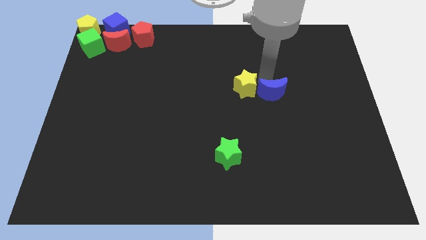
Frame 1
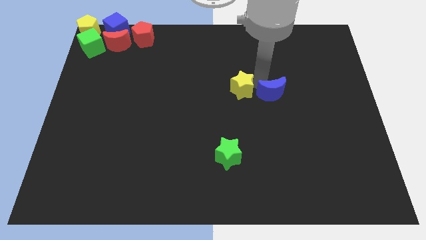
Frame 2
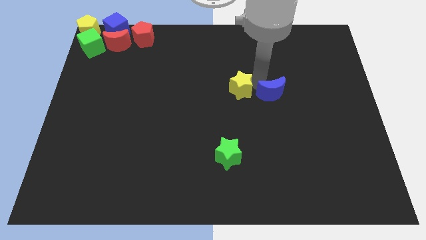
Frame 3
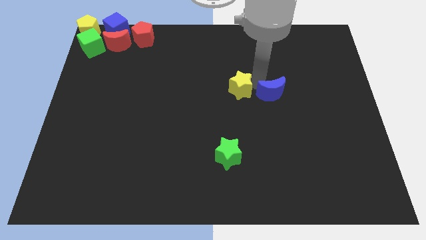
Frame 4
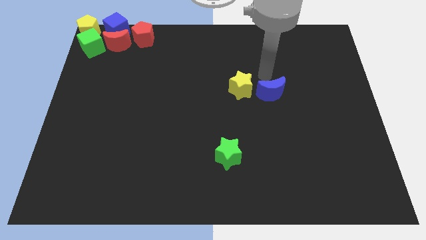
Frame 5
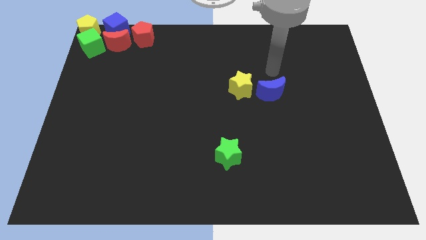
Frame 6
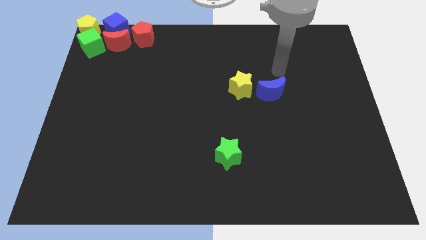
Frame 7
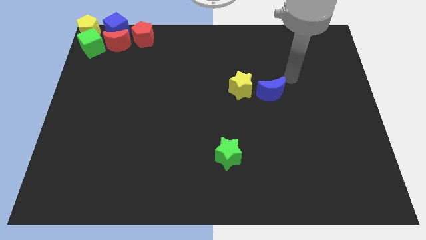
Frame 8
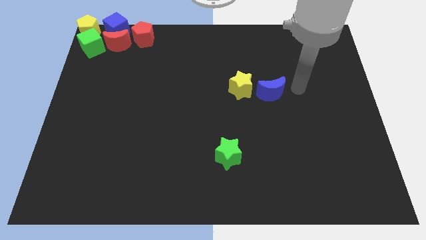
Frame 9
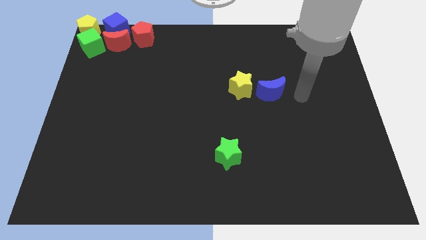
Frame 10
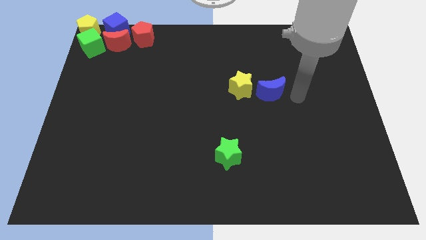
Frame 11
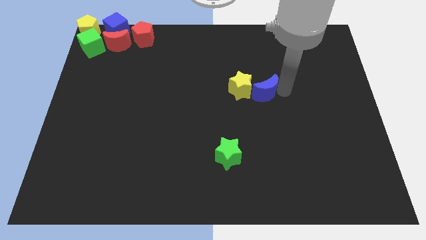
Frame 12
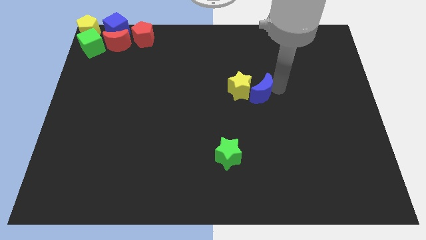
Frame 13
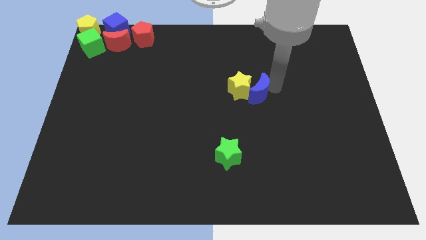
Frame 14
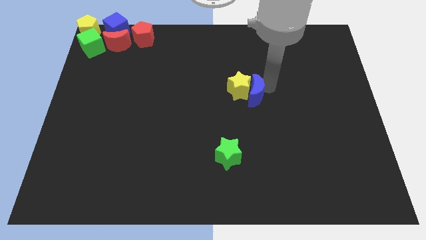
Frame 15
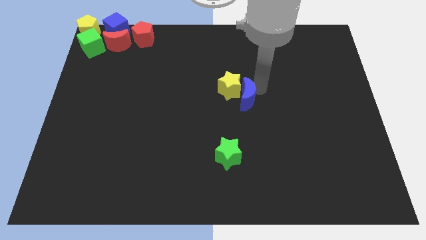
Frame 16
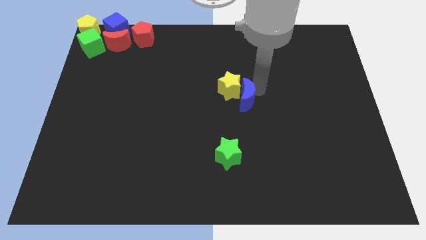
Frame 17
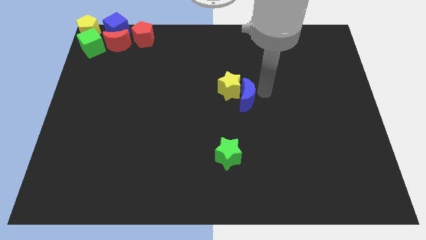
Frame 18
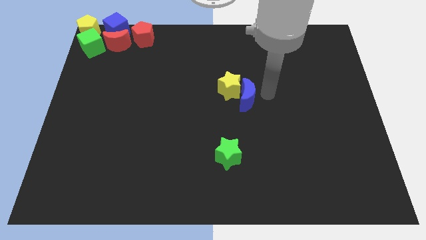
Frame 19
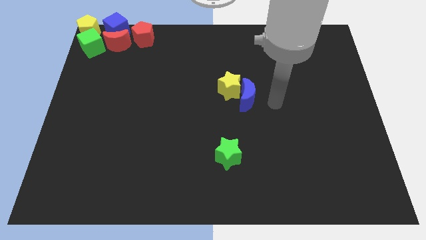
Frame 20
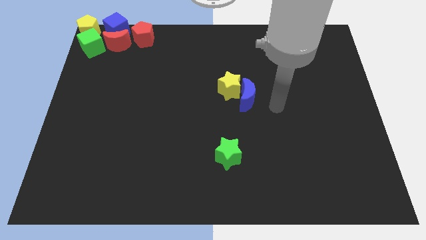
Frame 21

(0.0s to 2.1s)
move blue moon and yellow star towards the middle of the board

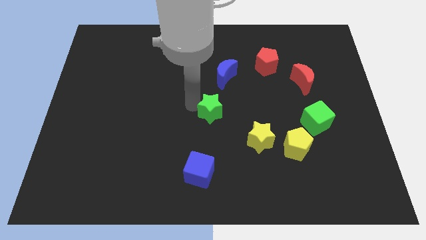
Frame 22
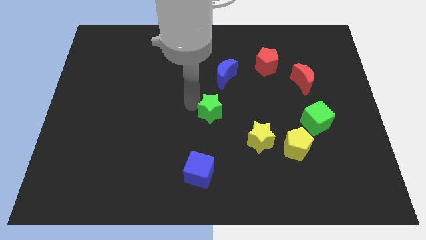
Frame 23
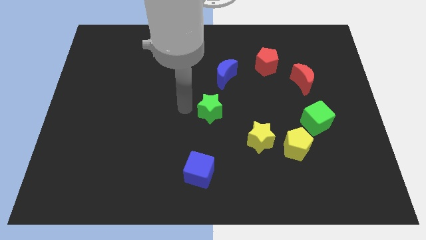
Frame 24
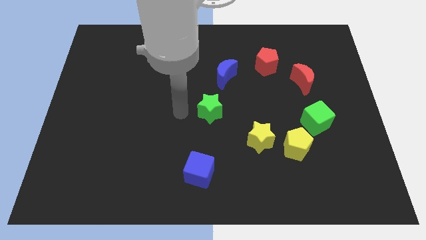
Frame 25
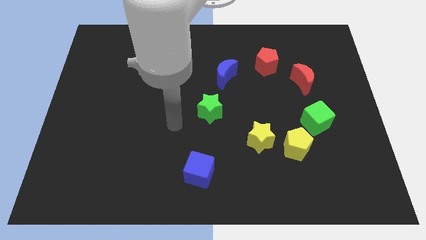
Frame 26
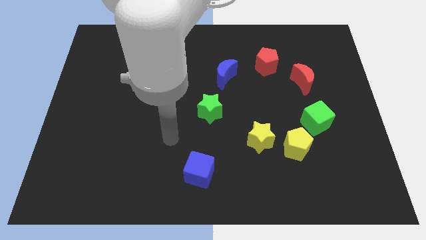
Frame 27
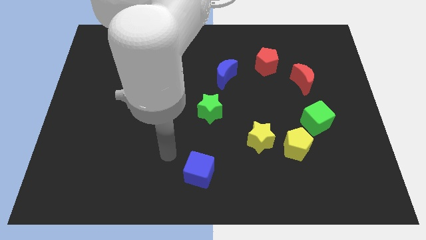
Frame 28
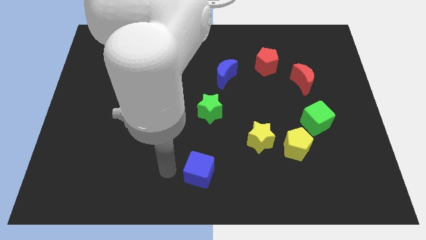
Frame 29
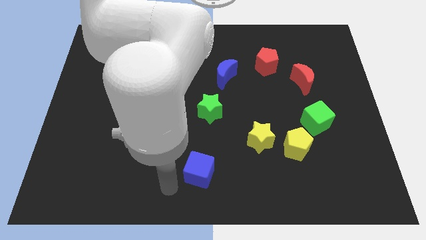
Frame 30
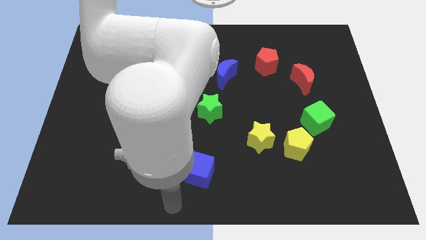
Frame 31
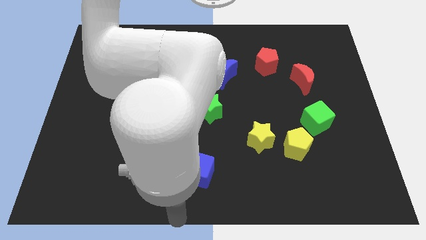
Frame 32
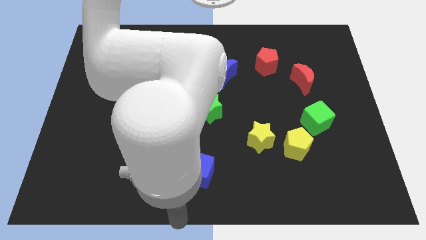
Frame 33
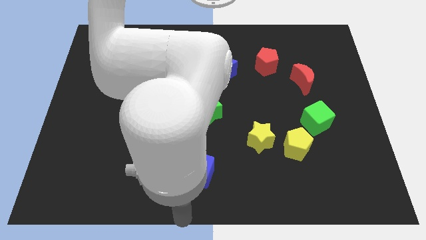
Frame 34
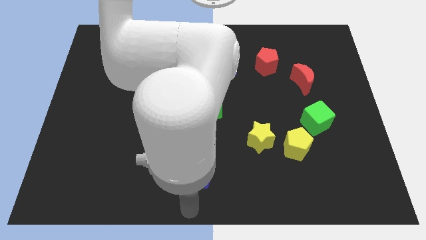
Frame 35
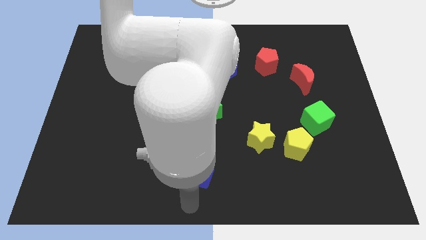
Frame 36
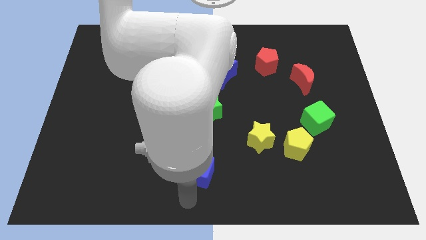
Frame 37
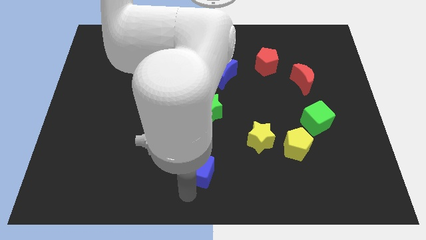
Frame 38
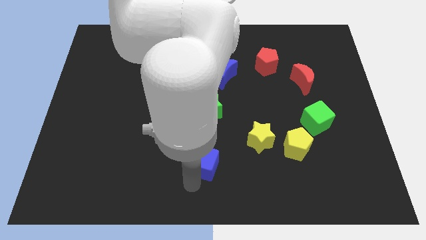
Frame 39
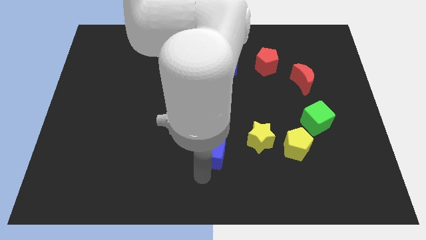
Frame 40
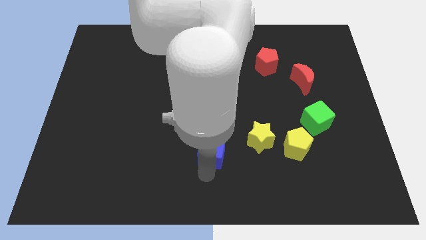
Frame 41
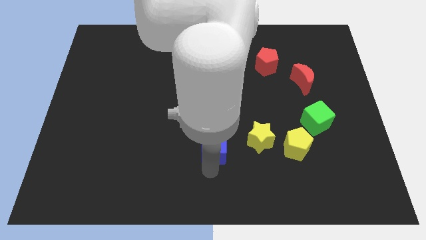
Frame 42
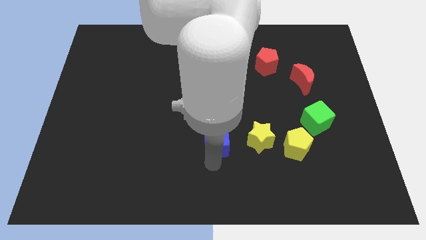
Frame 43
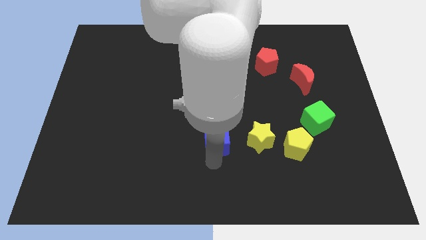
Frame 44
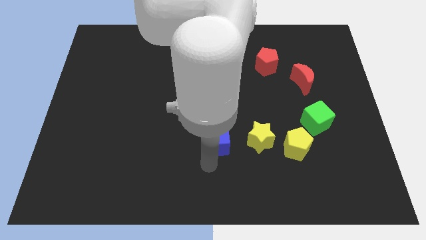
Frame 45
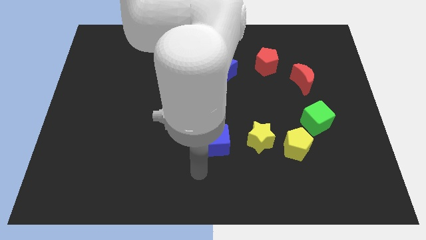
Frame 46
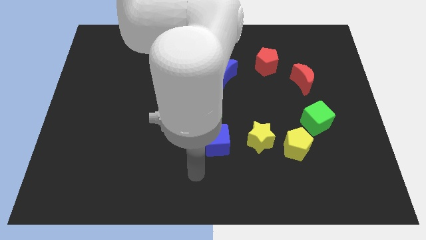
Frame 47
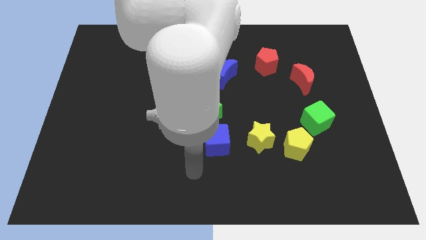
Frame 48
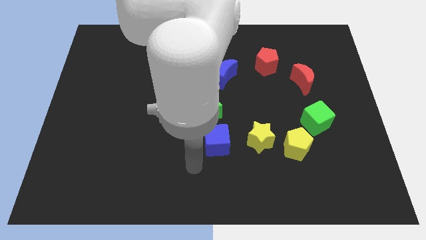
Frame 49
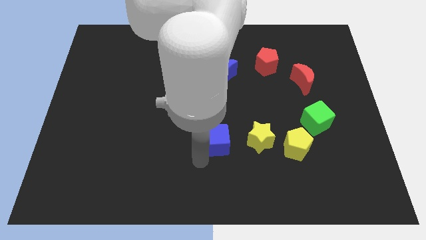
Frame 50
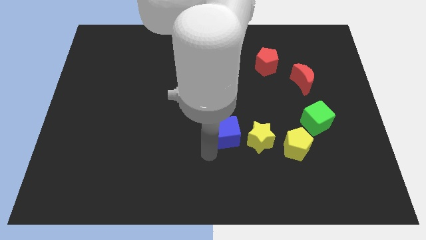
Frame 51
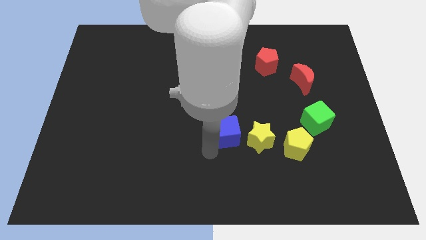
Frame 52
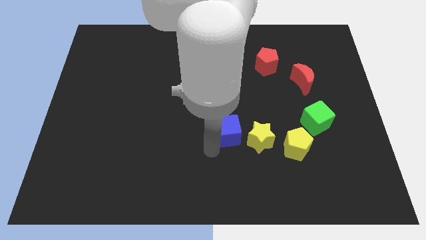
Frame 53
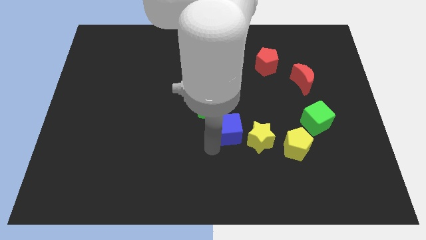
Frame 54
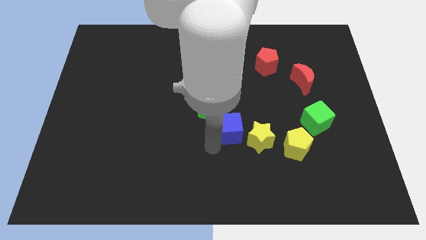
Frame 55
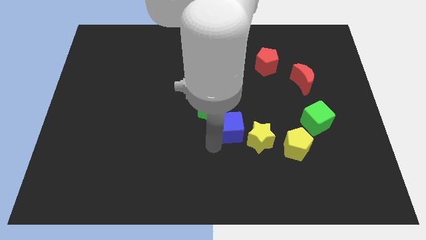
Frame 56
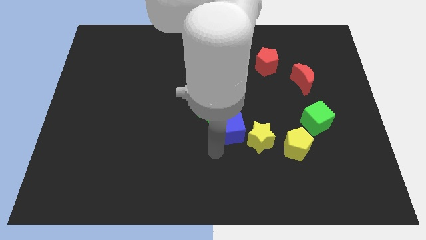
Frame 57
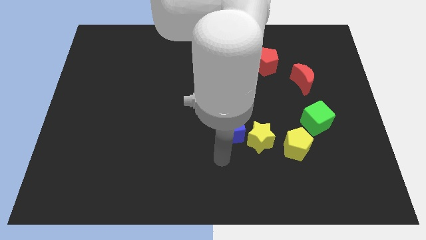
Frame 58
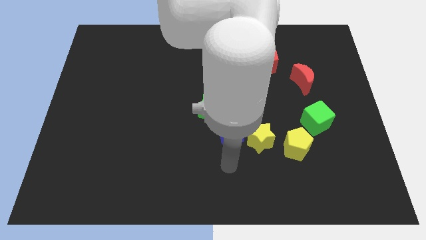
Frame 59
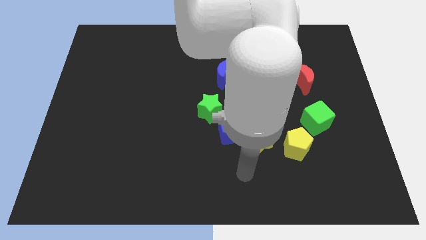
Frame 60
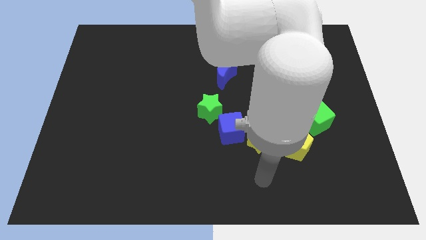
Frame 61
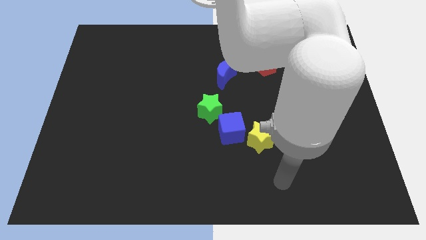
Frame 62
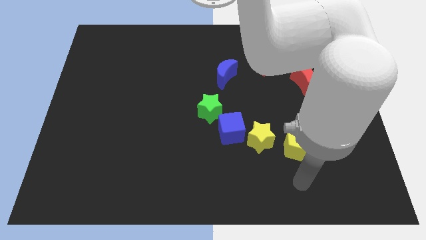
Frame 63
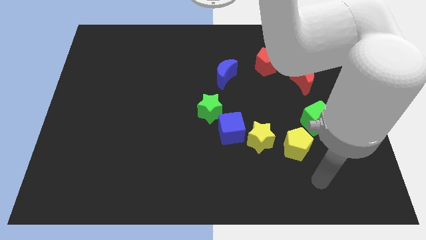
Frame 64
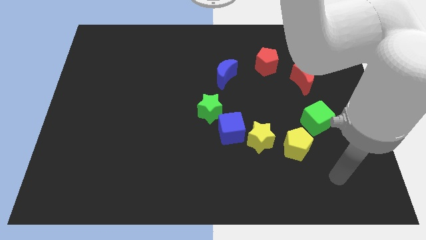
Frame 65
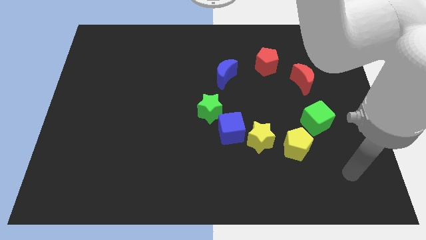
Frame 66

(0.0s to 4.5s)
push the blue cube upward

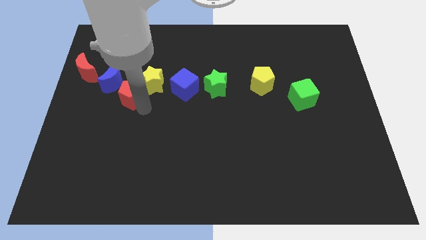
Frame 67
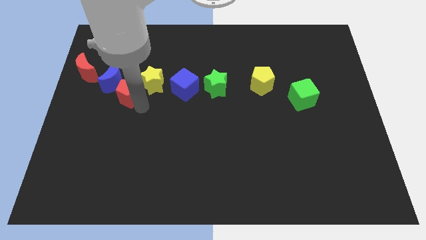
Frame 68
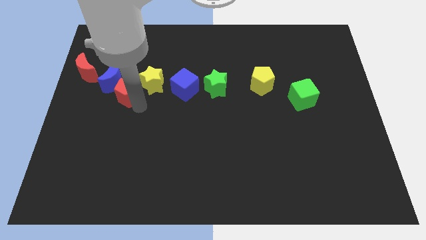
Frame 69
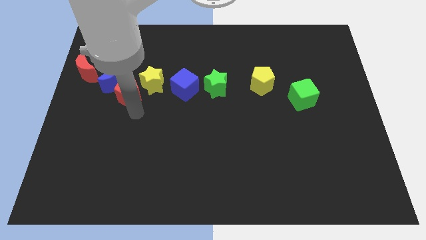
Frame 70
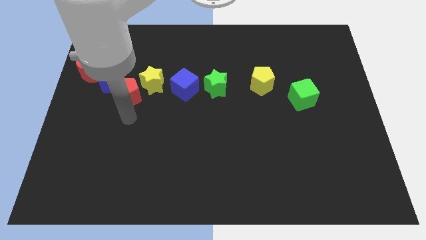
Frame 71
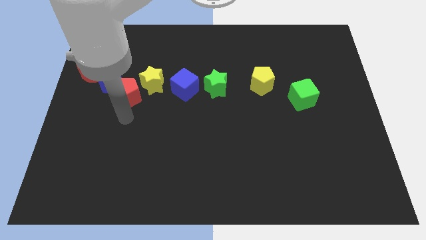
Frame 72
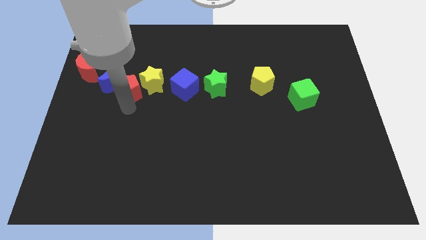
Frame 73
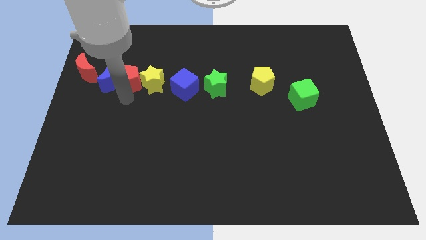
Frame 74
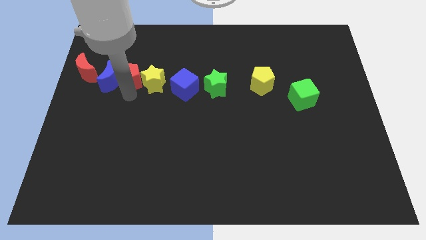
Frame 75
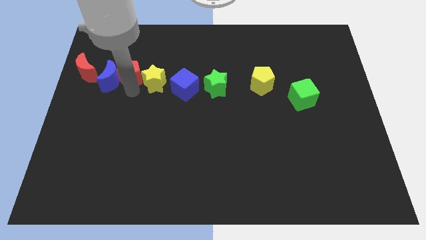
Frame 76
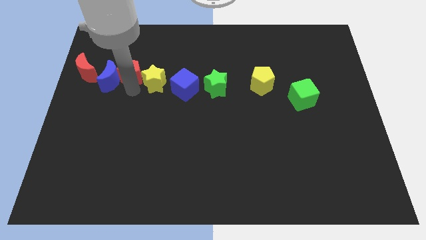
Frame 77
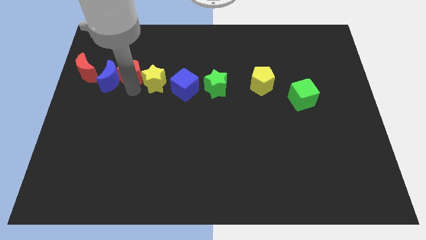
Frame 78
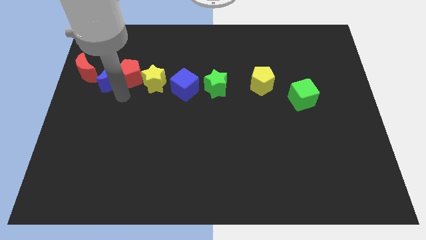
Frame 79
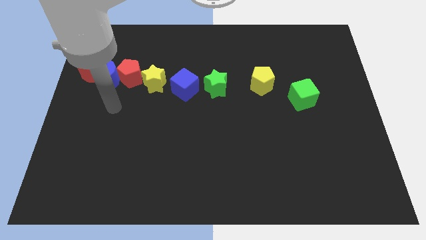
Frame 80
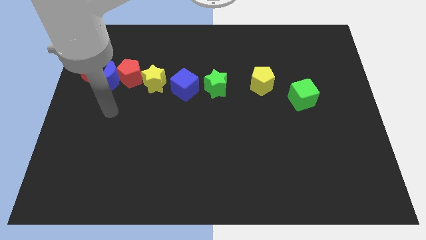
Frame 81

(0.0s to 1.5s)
place the red pentagon in between the blue moon and the yellow star

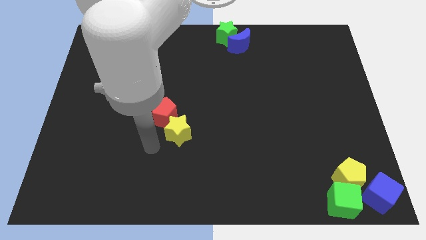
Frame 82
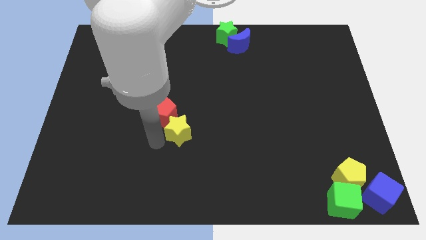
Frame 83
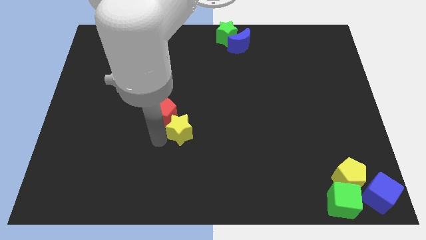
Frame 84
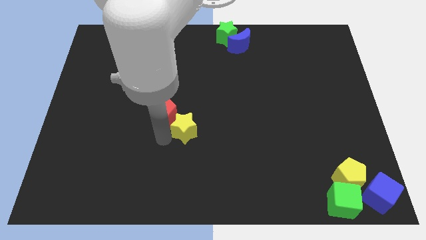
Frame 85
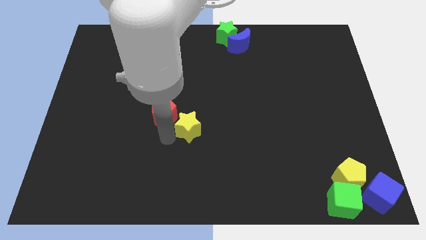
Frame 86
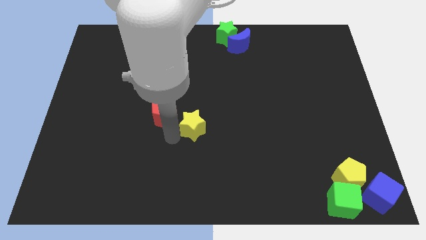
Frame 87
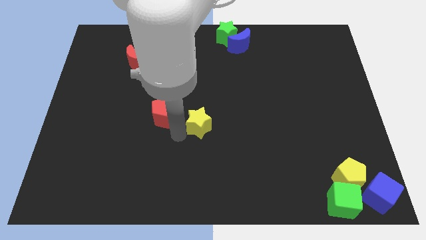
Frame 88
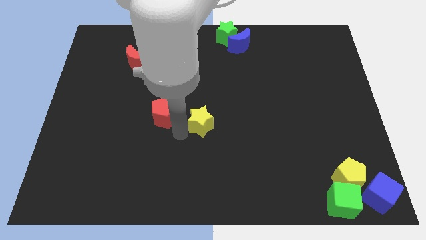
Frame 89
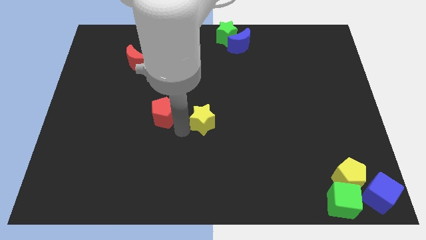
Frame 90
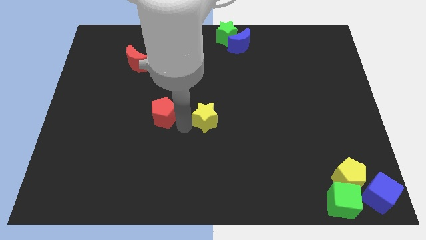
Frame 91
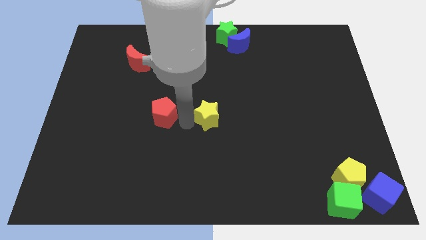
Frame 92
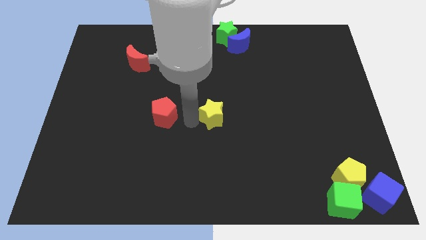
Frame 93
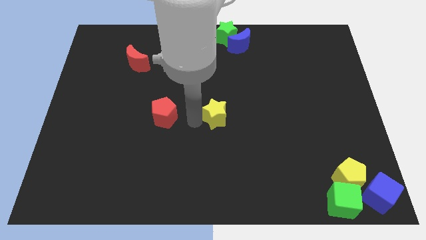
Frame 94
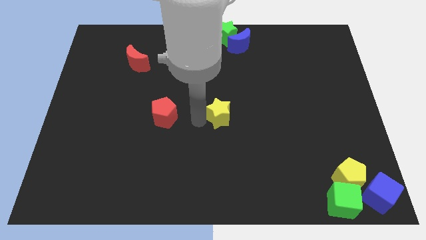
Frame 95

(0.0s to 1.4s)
move the yellow star to the middle of the board
